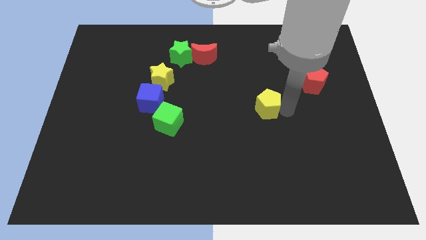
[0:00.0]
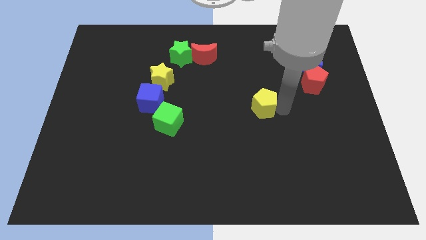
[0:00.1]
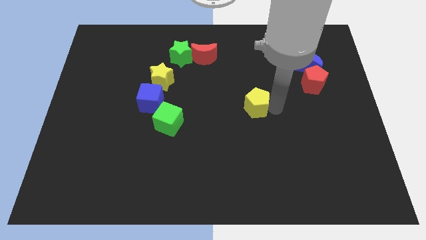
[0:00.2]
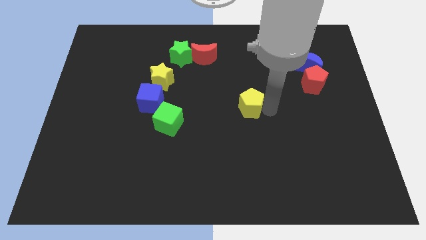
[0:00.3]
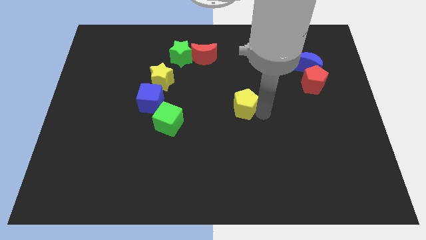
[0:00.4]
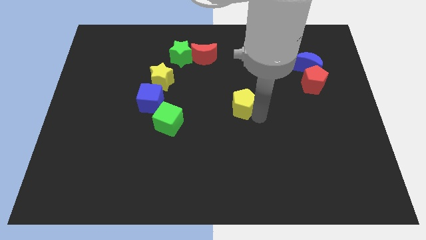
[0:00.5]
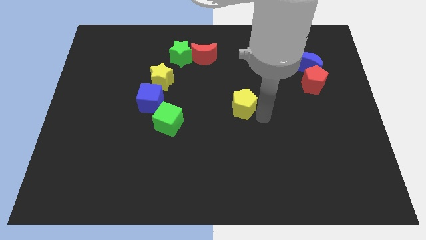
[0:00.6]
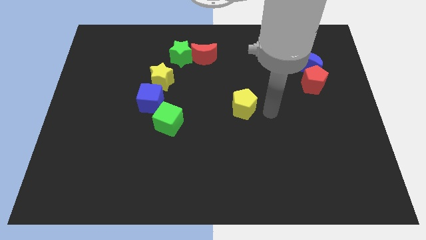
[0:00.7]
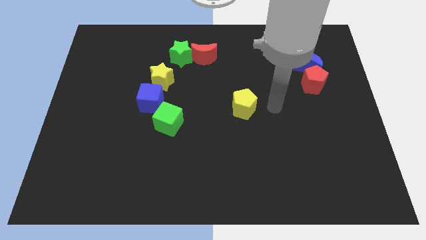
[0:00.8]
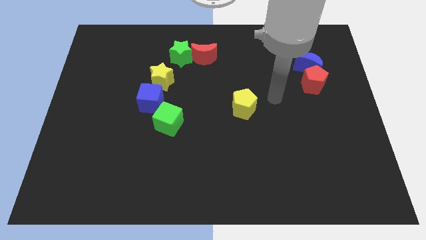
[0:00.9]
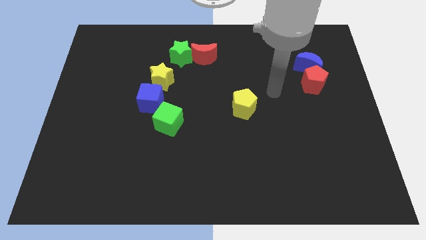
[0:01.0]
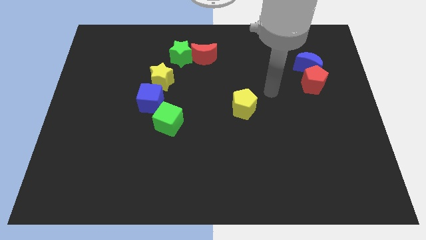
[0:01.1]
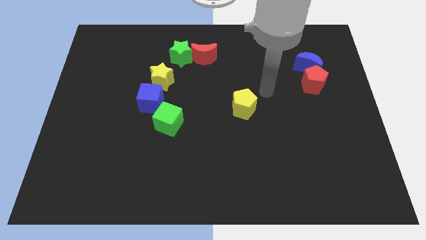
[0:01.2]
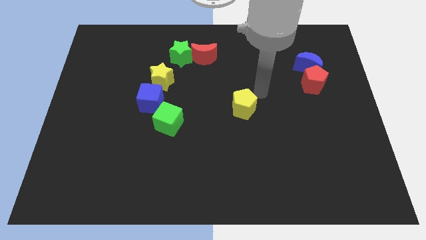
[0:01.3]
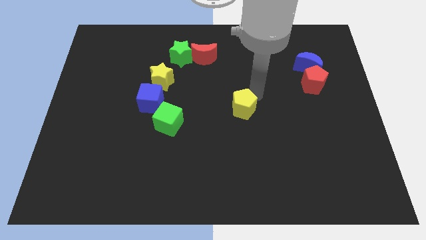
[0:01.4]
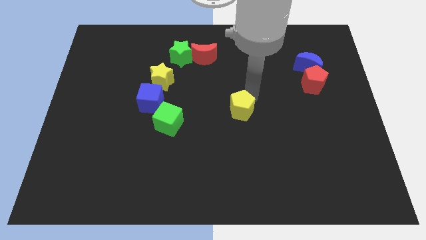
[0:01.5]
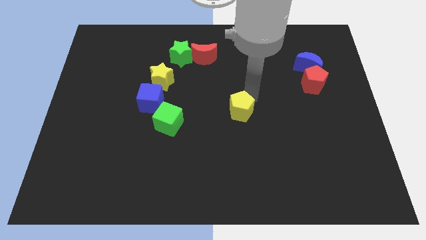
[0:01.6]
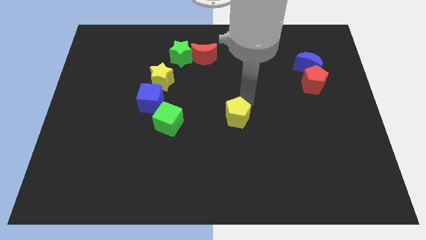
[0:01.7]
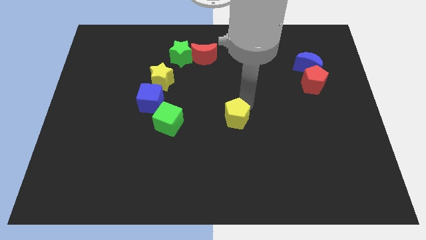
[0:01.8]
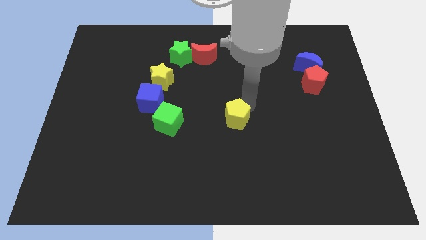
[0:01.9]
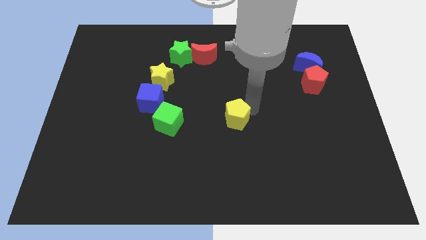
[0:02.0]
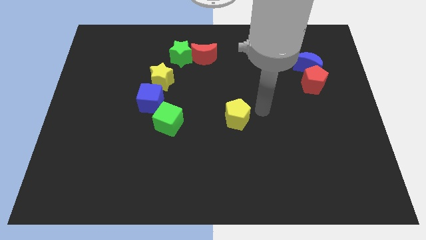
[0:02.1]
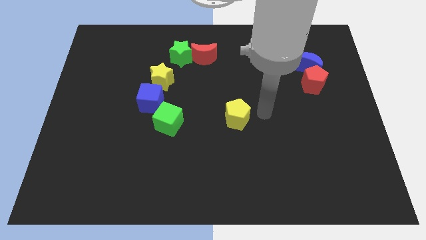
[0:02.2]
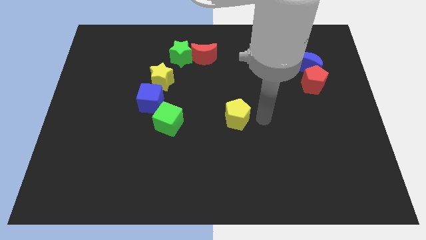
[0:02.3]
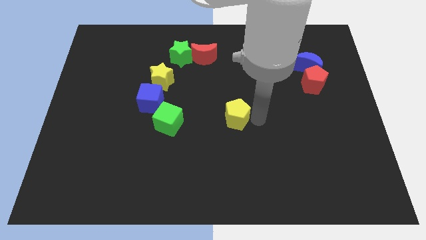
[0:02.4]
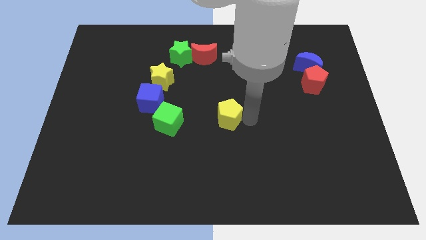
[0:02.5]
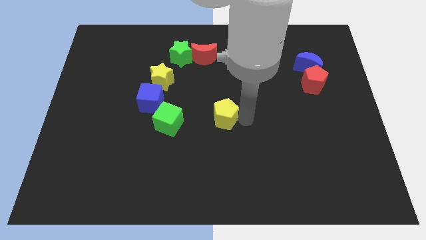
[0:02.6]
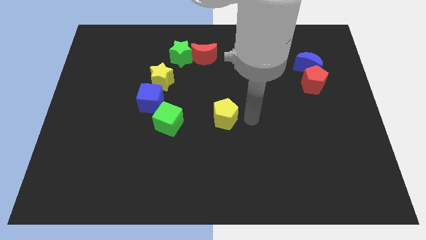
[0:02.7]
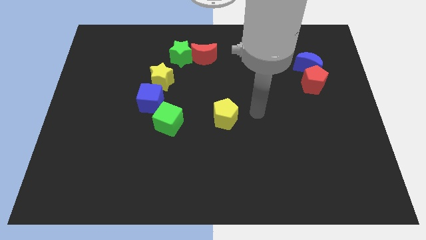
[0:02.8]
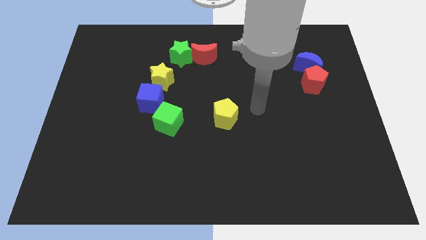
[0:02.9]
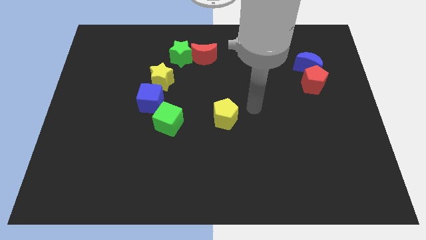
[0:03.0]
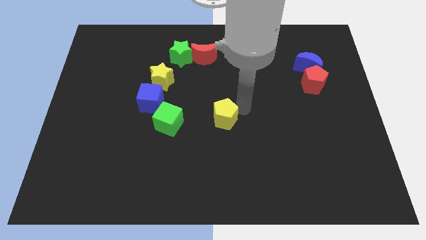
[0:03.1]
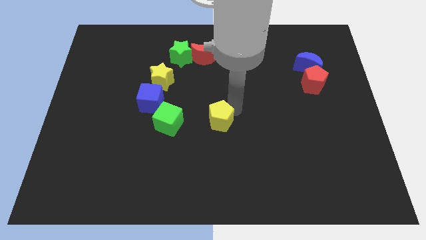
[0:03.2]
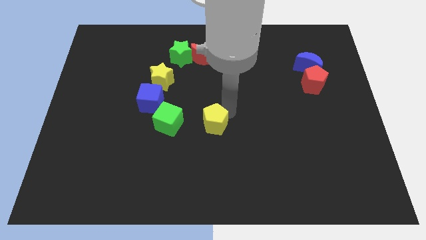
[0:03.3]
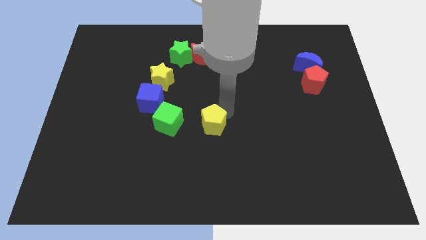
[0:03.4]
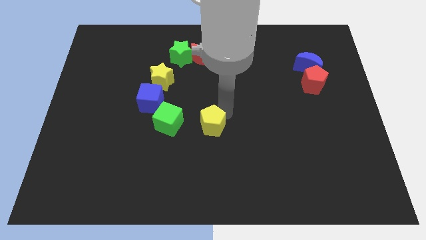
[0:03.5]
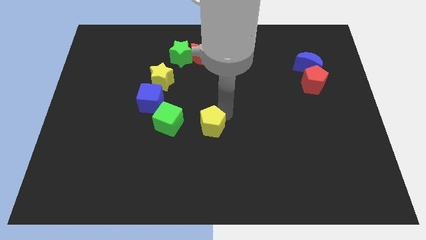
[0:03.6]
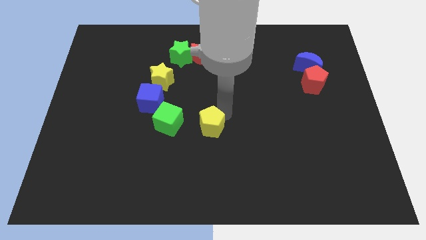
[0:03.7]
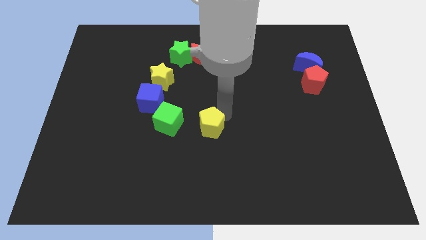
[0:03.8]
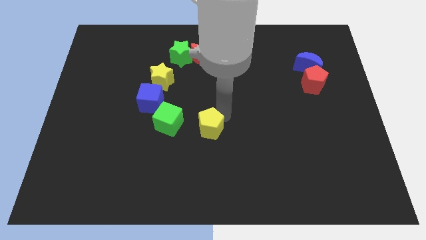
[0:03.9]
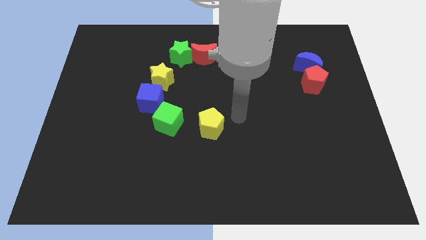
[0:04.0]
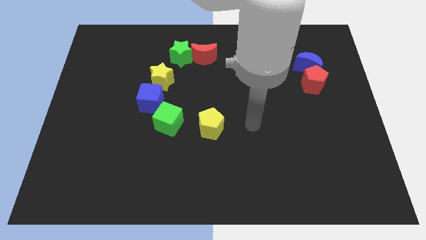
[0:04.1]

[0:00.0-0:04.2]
place the yellow pentagon to the right of the green cube

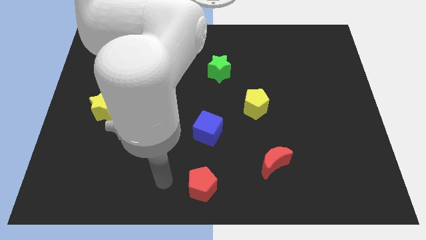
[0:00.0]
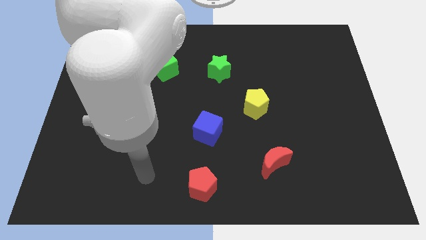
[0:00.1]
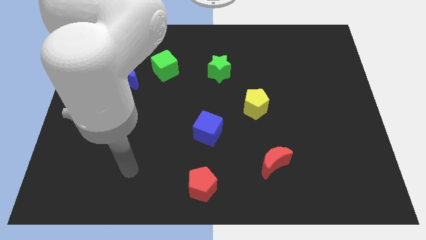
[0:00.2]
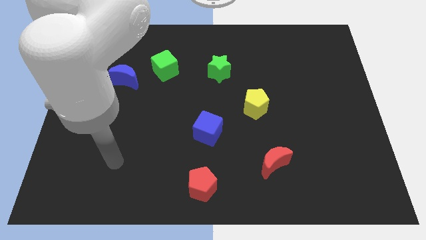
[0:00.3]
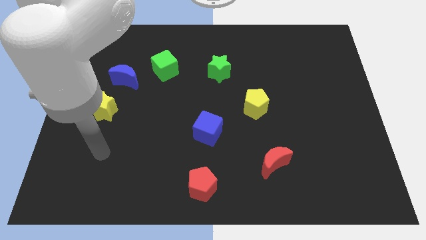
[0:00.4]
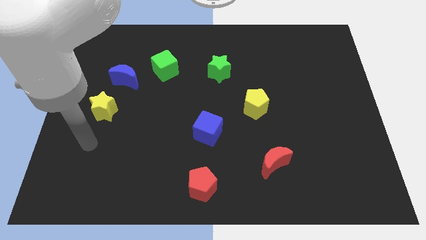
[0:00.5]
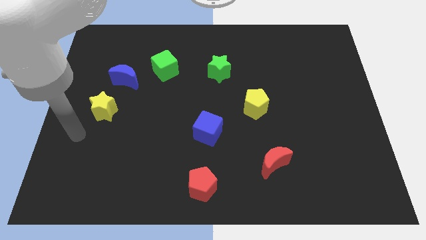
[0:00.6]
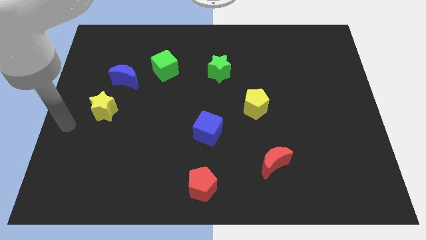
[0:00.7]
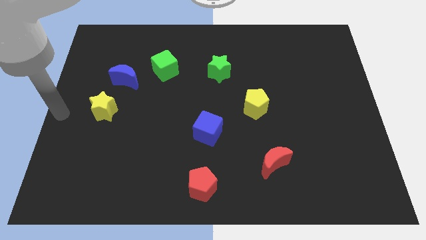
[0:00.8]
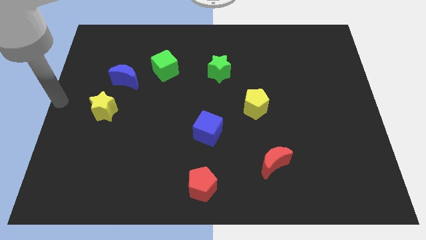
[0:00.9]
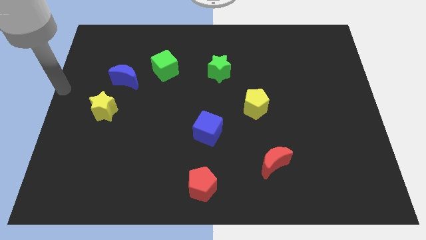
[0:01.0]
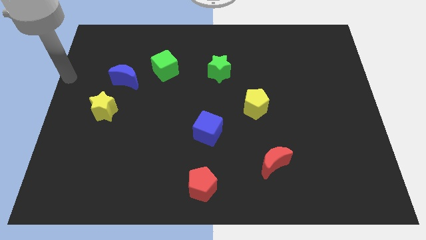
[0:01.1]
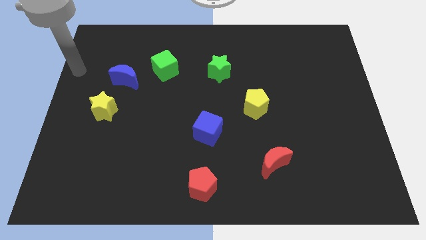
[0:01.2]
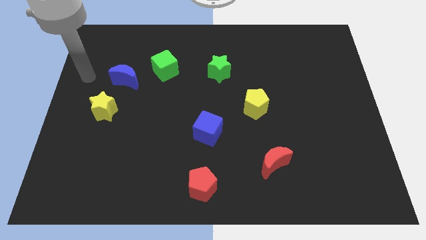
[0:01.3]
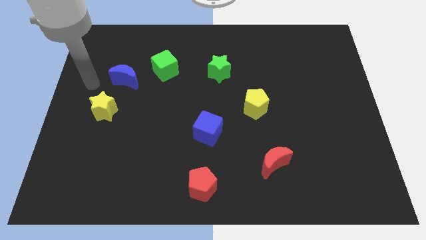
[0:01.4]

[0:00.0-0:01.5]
move your arm to the top of the yellow star

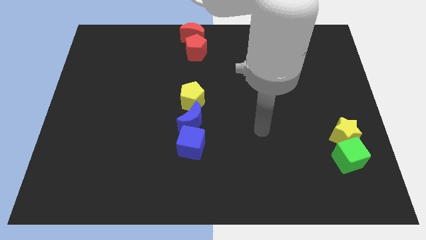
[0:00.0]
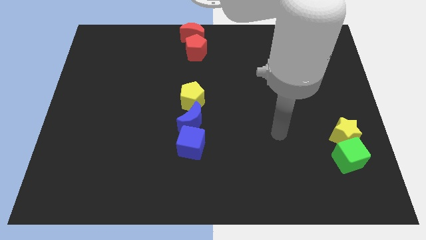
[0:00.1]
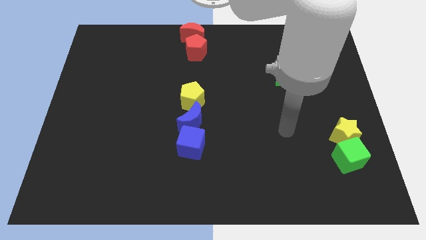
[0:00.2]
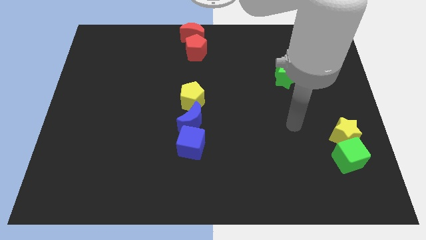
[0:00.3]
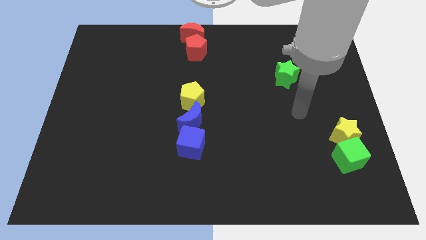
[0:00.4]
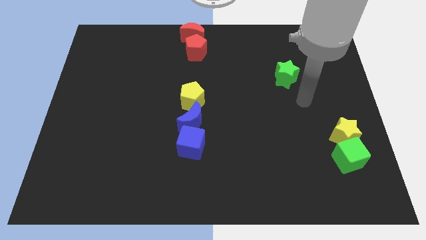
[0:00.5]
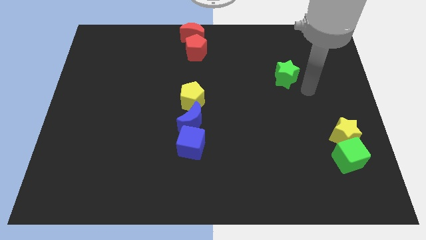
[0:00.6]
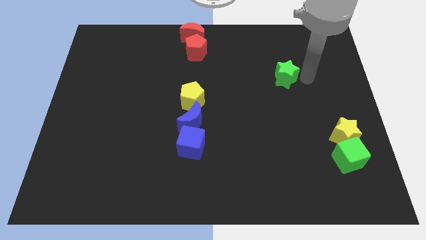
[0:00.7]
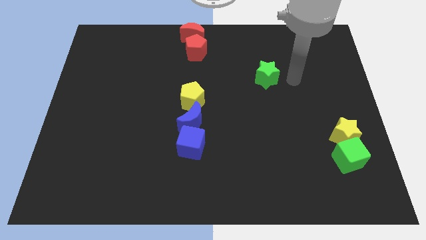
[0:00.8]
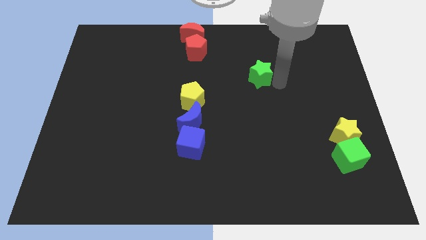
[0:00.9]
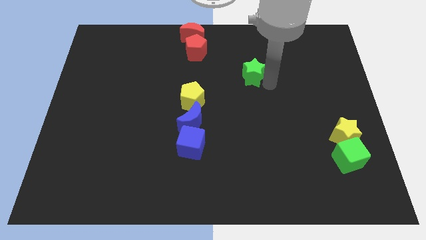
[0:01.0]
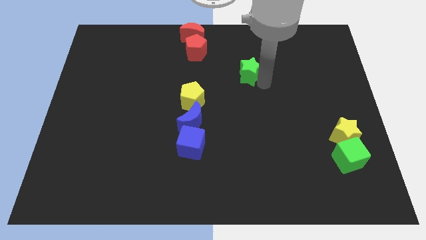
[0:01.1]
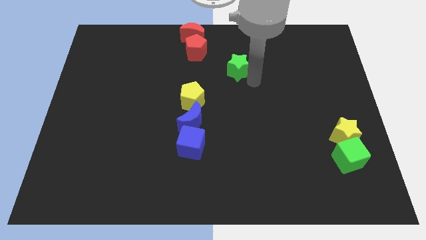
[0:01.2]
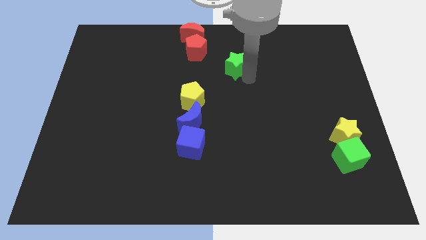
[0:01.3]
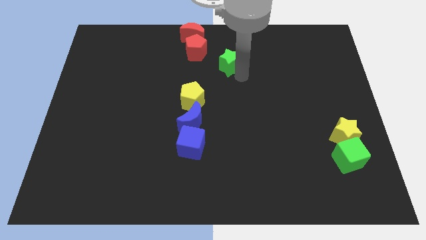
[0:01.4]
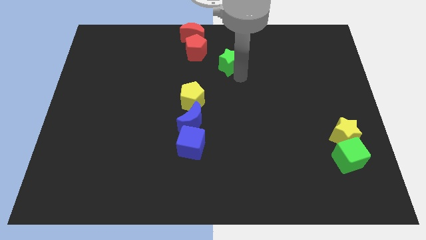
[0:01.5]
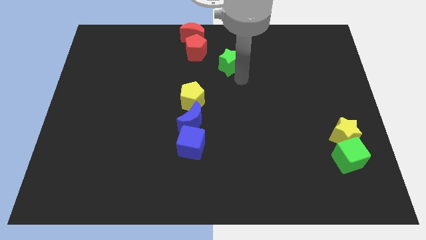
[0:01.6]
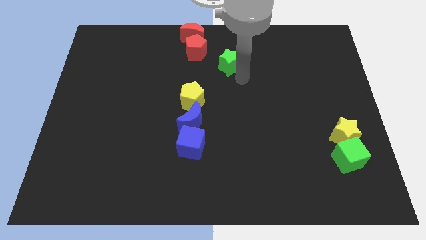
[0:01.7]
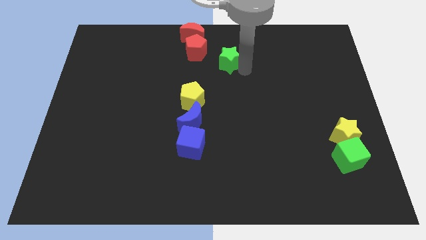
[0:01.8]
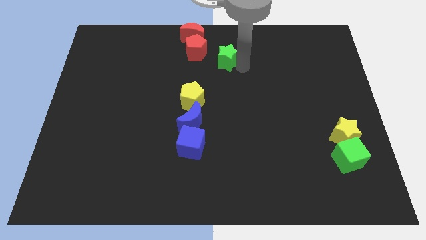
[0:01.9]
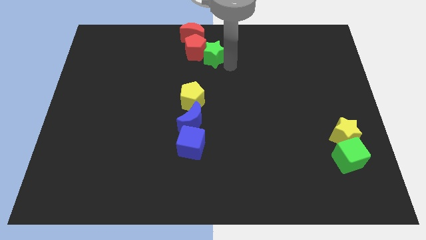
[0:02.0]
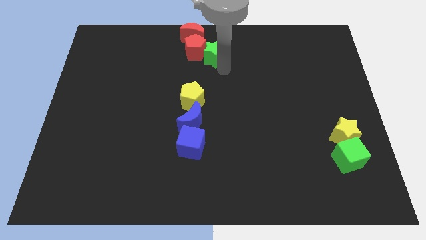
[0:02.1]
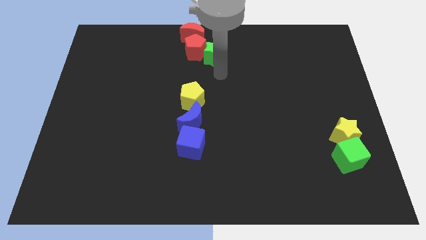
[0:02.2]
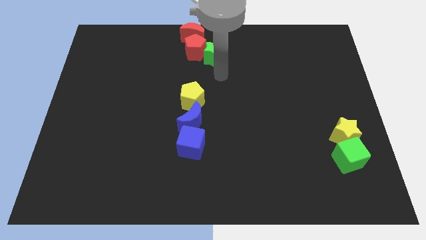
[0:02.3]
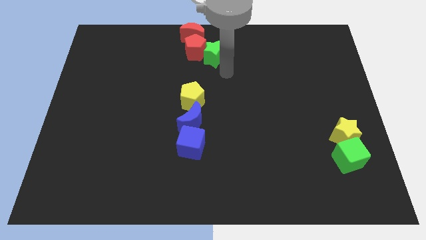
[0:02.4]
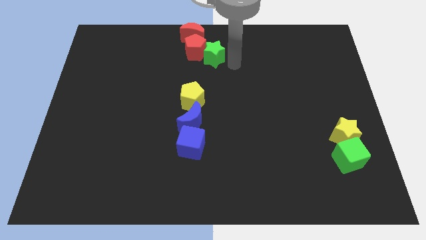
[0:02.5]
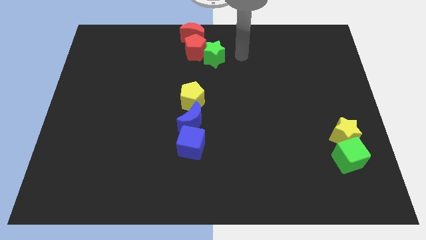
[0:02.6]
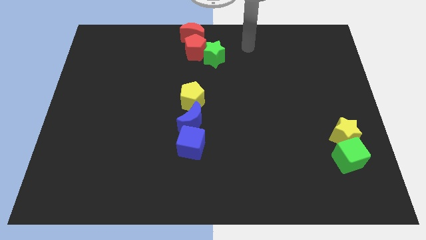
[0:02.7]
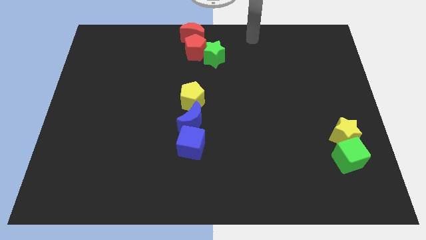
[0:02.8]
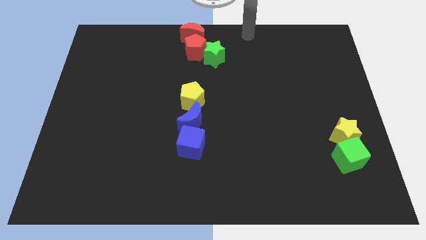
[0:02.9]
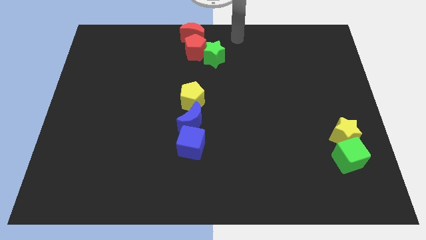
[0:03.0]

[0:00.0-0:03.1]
add green star into red pentagon

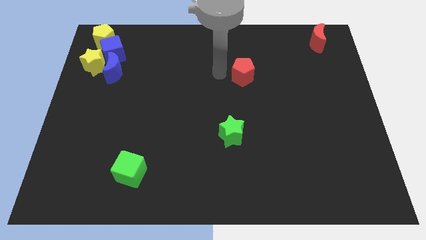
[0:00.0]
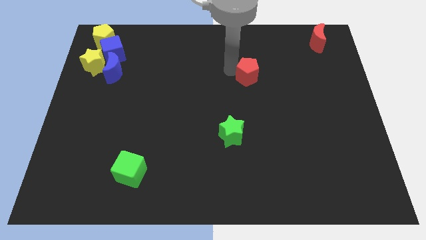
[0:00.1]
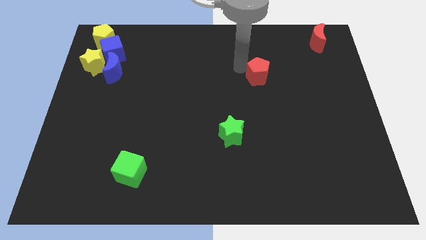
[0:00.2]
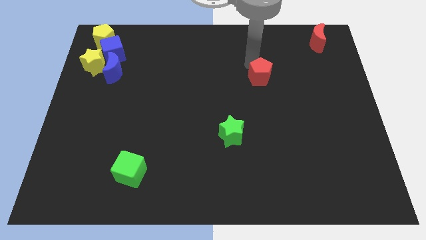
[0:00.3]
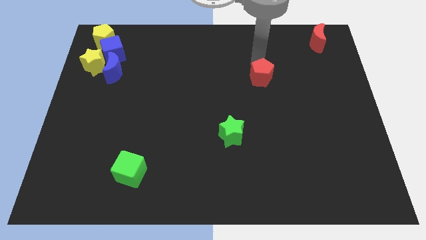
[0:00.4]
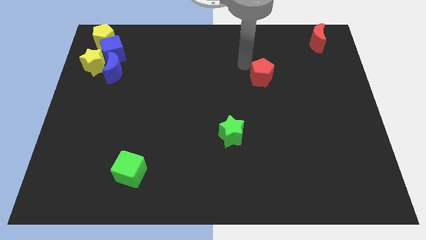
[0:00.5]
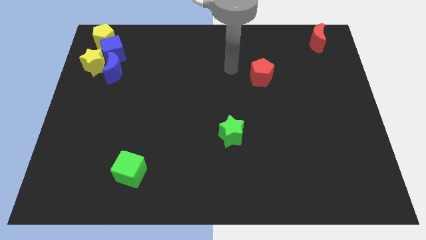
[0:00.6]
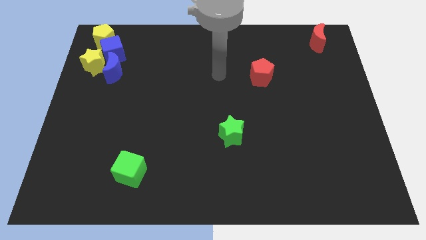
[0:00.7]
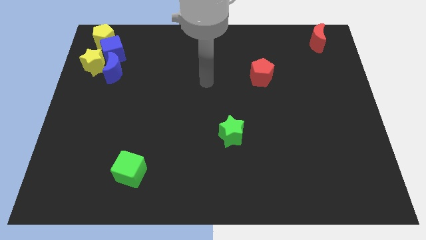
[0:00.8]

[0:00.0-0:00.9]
slightly push the red pentagon to the right
